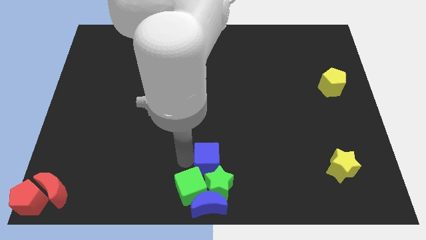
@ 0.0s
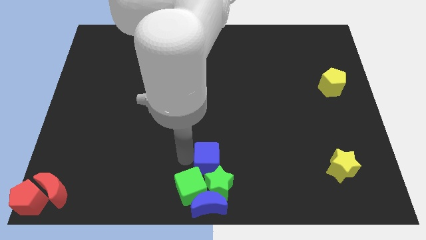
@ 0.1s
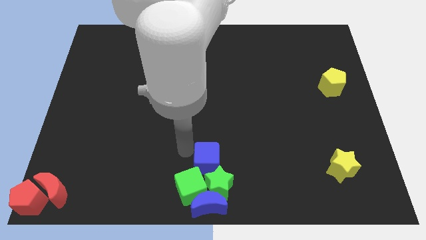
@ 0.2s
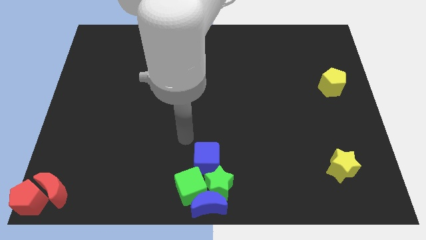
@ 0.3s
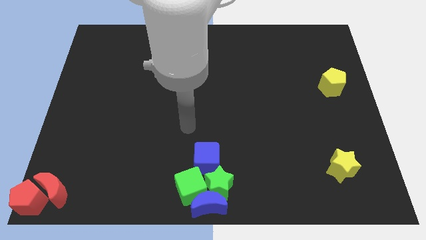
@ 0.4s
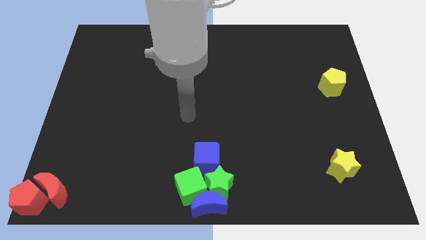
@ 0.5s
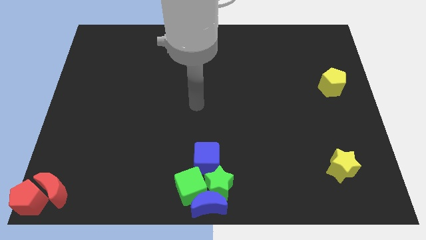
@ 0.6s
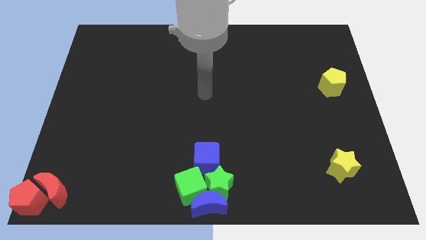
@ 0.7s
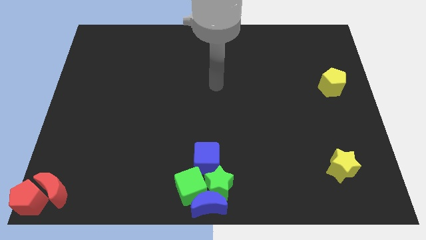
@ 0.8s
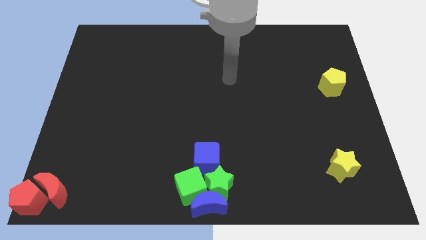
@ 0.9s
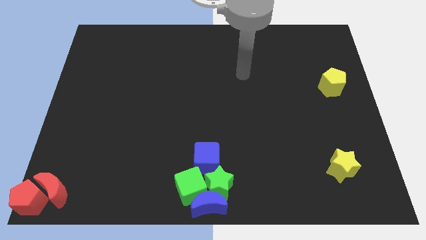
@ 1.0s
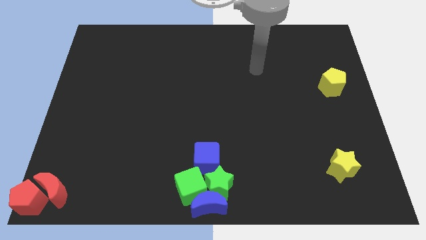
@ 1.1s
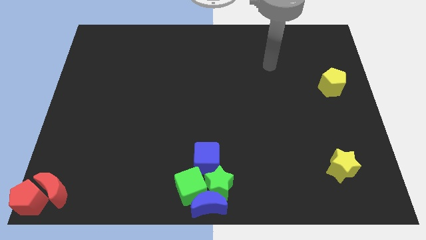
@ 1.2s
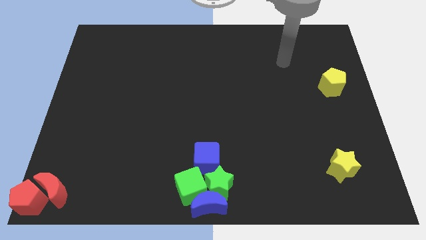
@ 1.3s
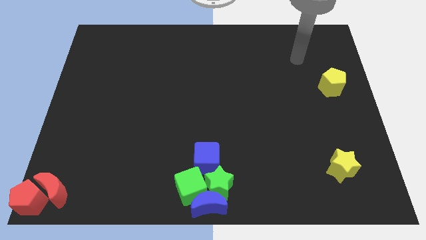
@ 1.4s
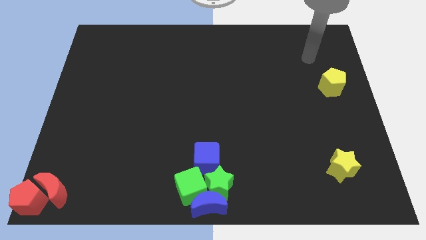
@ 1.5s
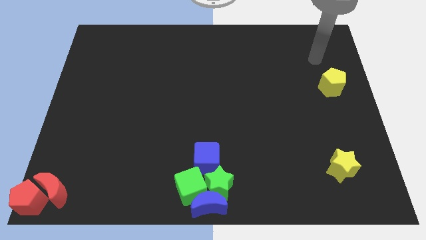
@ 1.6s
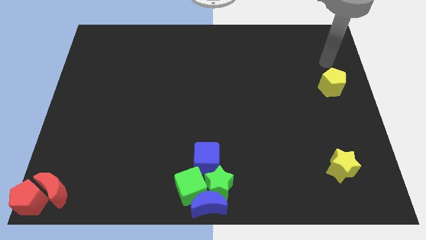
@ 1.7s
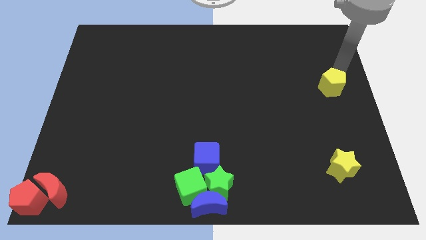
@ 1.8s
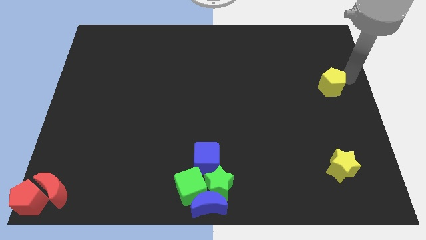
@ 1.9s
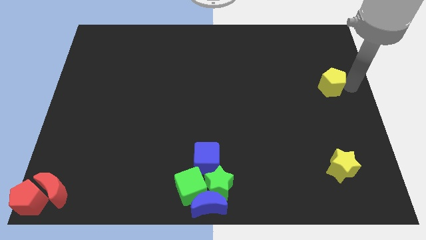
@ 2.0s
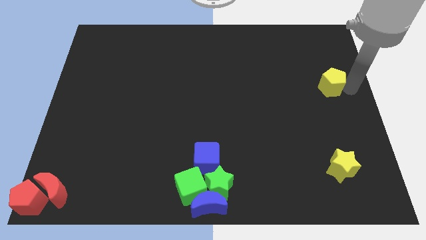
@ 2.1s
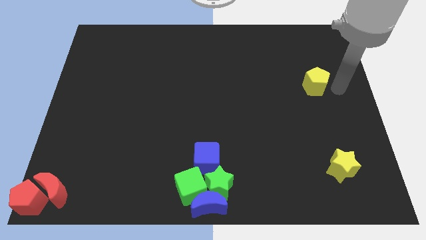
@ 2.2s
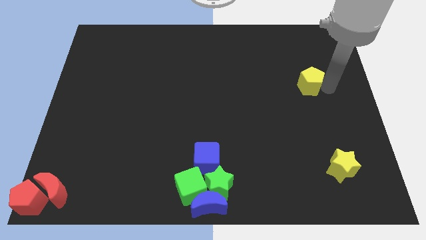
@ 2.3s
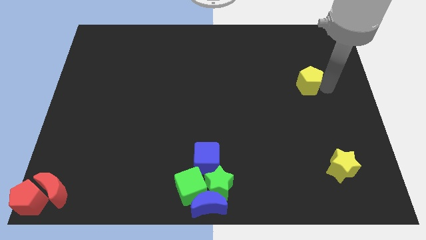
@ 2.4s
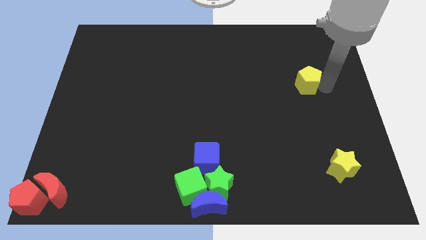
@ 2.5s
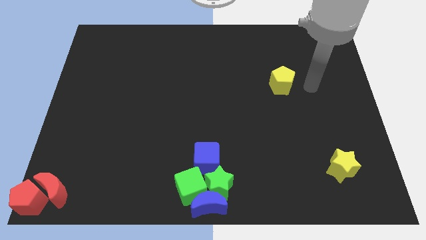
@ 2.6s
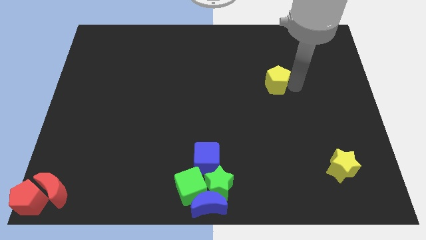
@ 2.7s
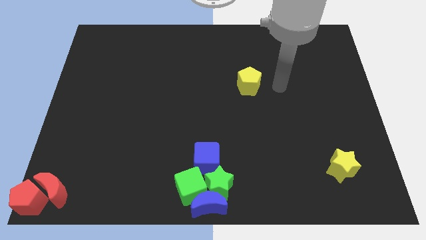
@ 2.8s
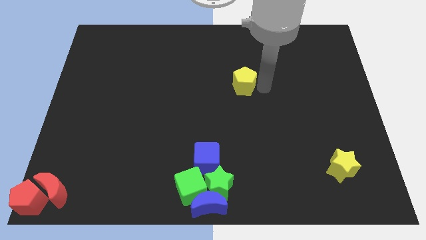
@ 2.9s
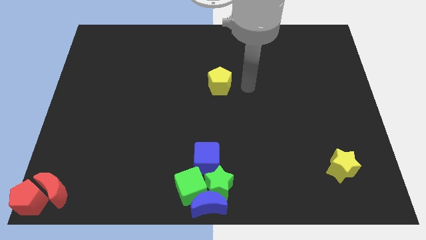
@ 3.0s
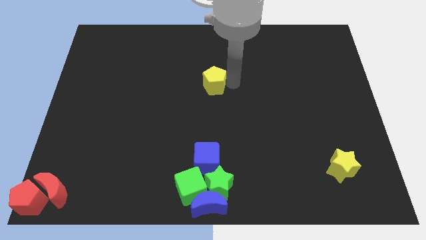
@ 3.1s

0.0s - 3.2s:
move the yellow pentagon towards center

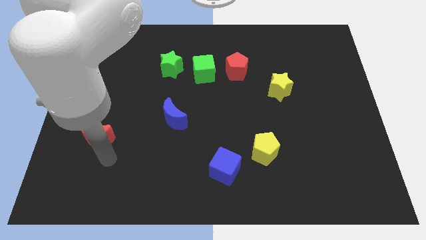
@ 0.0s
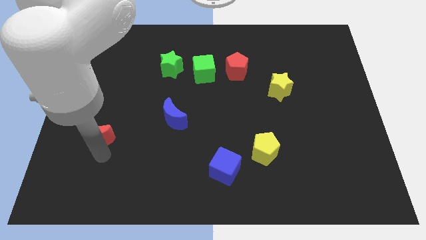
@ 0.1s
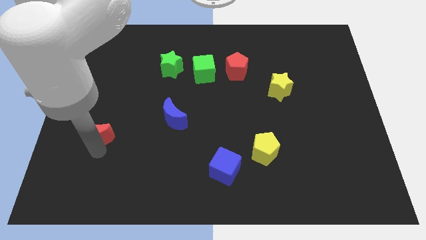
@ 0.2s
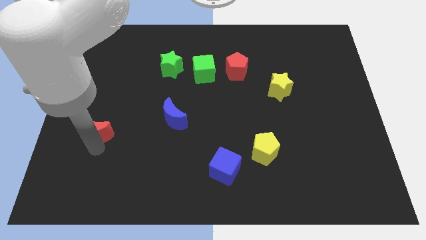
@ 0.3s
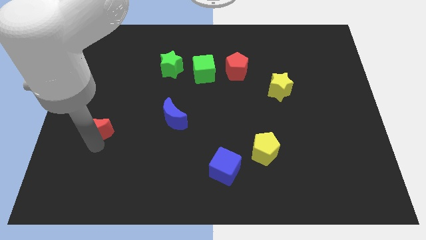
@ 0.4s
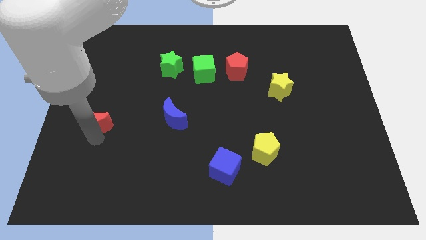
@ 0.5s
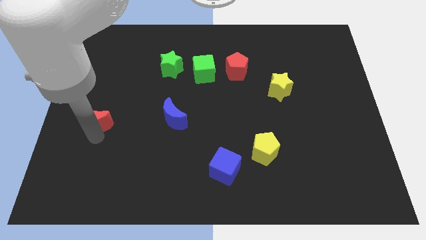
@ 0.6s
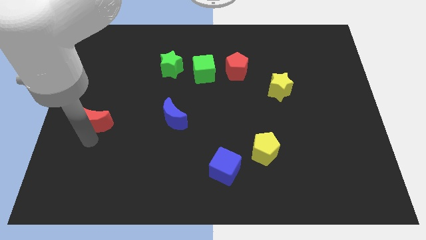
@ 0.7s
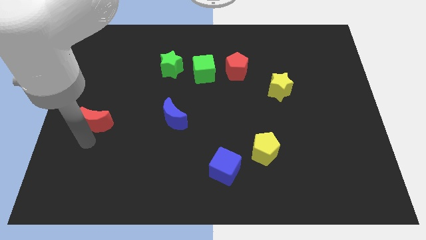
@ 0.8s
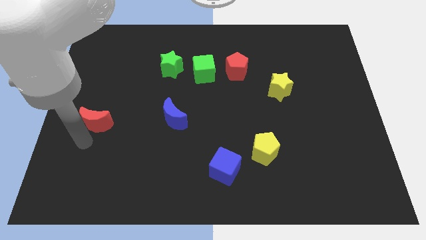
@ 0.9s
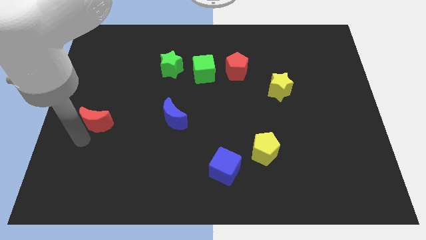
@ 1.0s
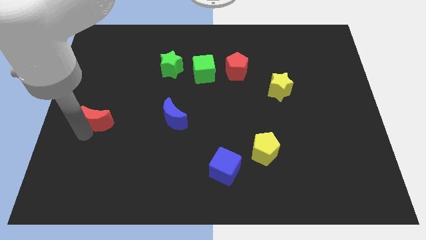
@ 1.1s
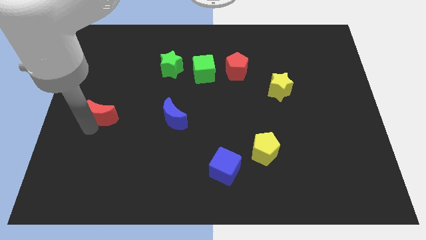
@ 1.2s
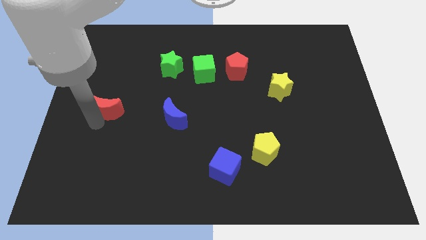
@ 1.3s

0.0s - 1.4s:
move the red moon upwards

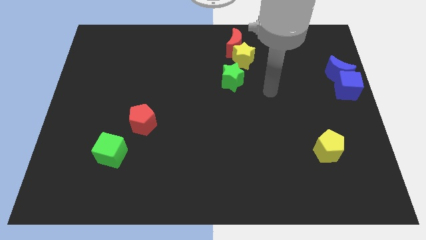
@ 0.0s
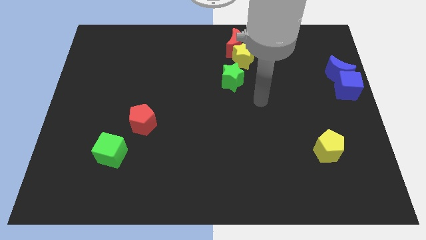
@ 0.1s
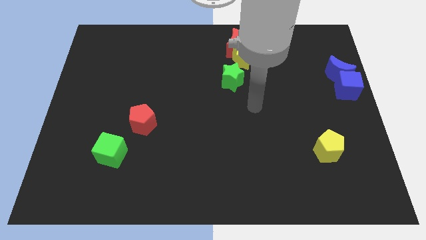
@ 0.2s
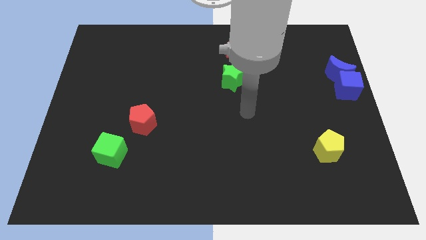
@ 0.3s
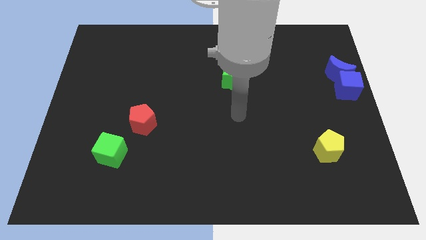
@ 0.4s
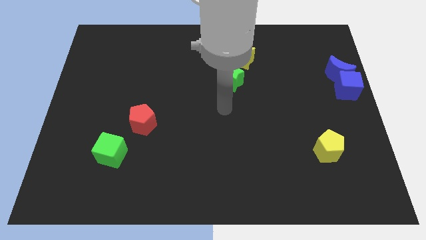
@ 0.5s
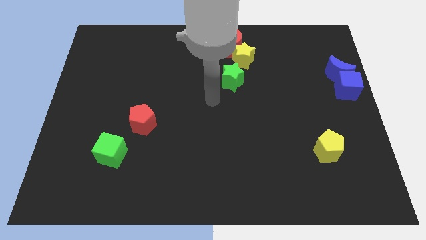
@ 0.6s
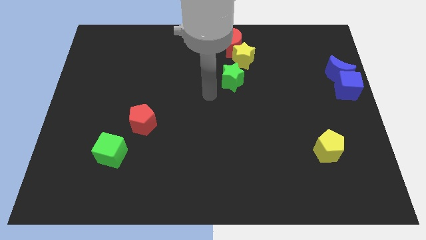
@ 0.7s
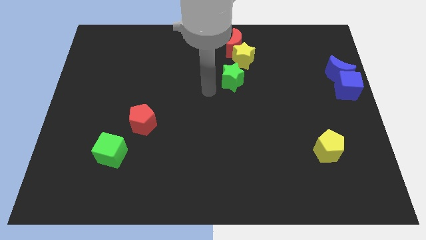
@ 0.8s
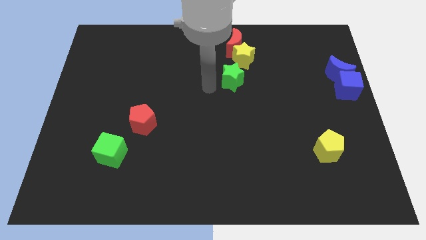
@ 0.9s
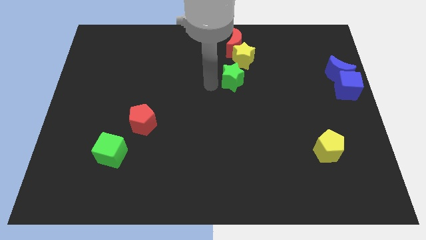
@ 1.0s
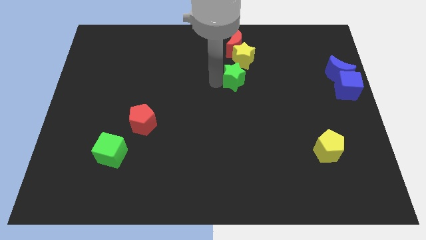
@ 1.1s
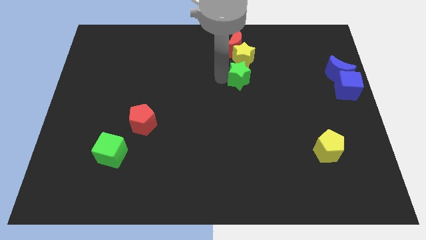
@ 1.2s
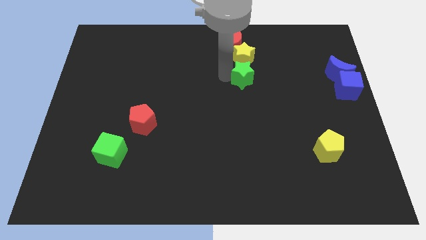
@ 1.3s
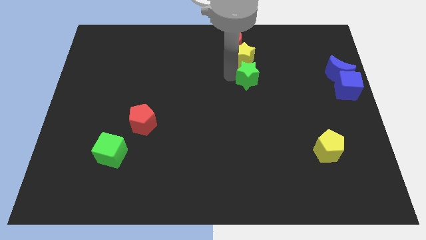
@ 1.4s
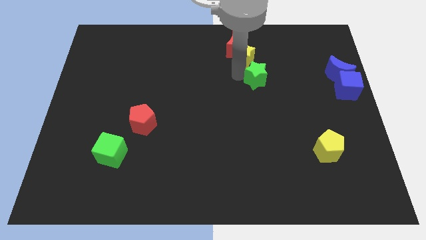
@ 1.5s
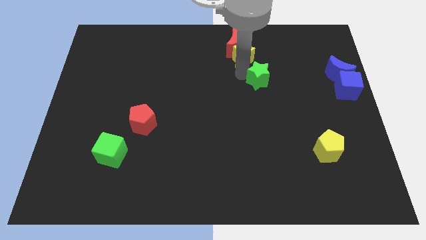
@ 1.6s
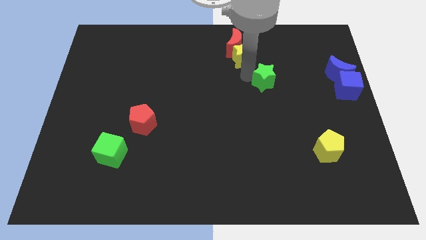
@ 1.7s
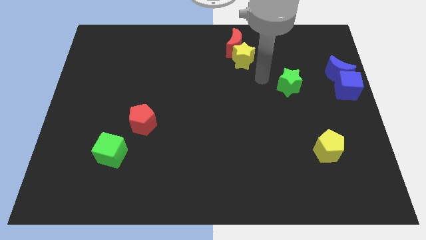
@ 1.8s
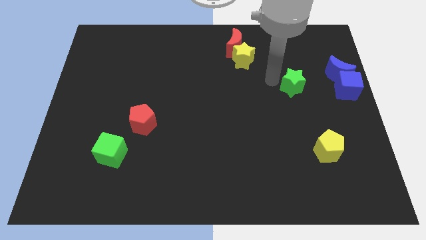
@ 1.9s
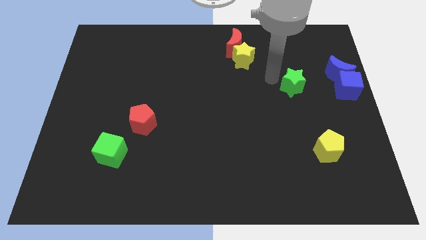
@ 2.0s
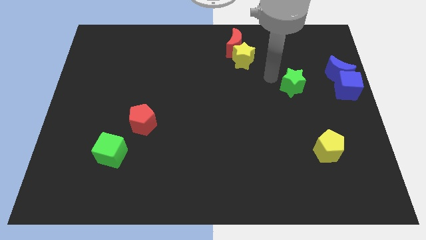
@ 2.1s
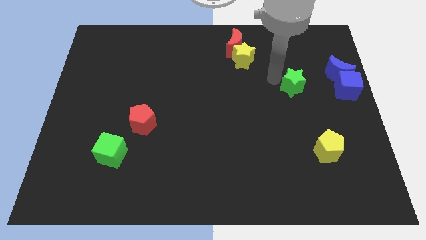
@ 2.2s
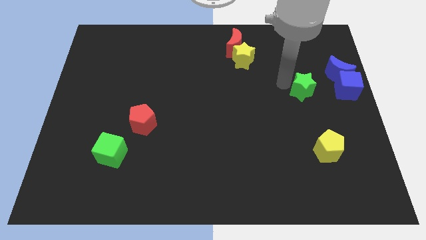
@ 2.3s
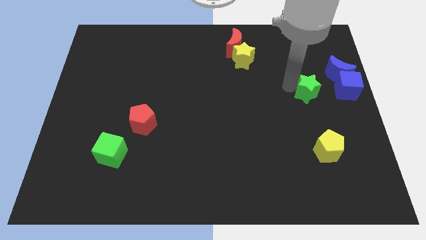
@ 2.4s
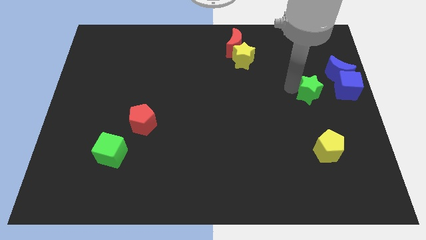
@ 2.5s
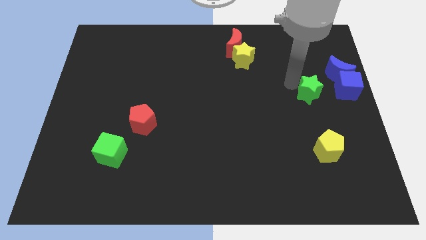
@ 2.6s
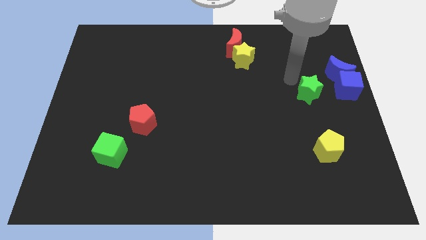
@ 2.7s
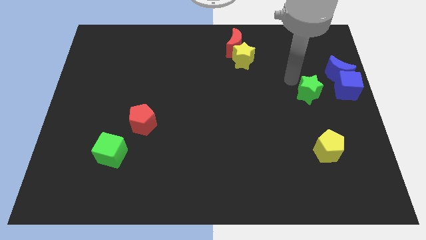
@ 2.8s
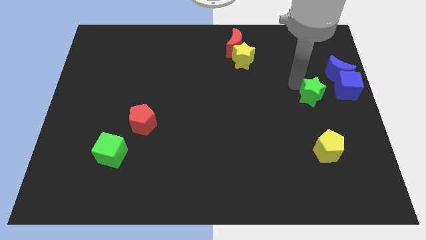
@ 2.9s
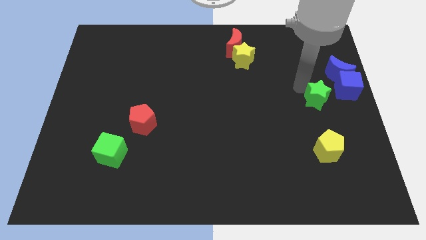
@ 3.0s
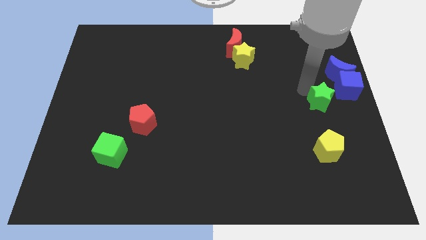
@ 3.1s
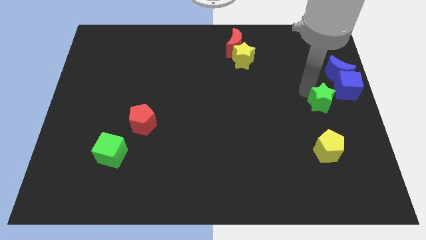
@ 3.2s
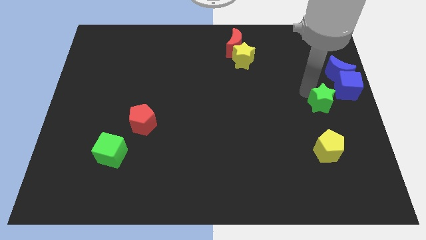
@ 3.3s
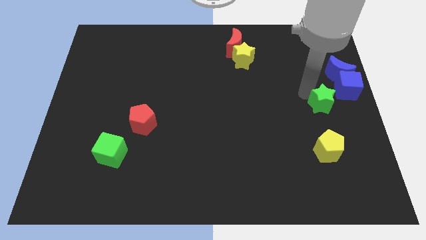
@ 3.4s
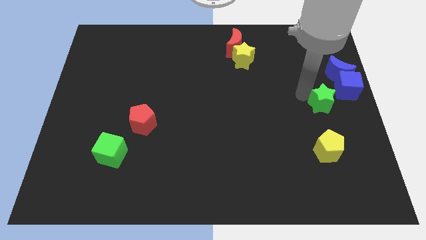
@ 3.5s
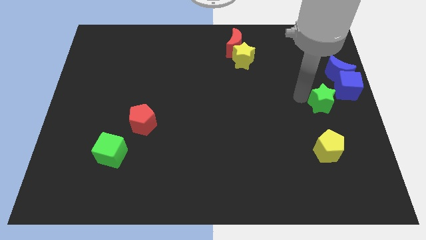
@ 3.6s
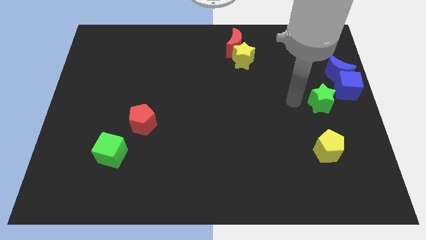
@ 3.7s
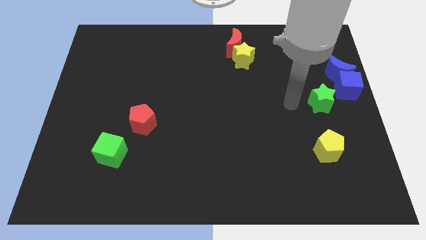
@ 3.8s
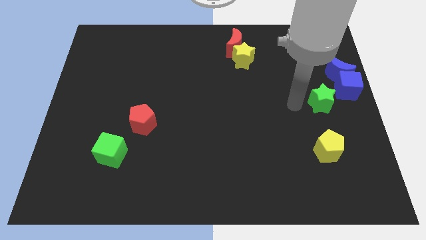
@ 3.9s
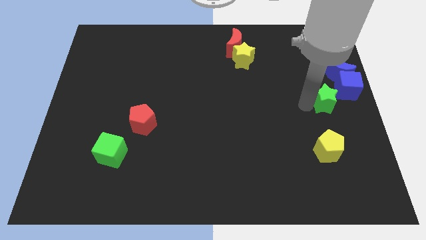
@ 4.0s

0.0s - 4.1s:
move the green star vertically above the yellow pentagon

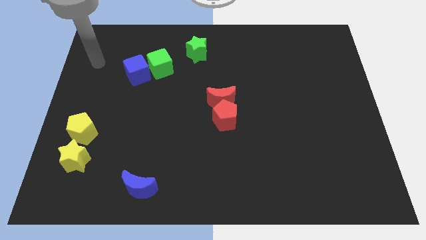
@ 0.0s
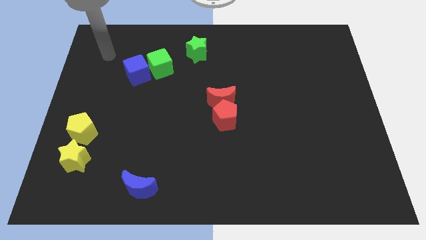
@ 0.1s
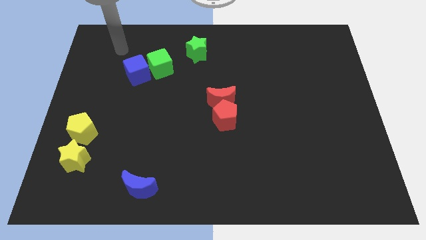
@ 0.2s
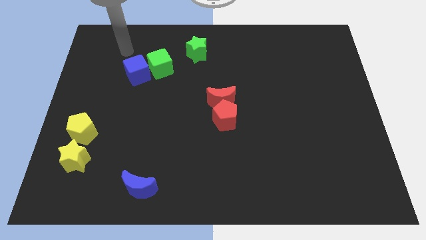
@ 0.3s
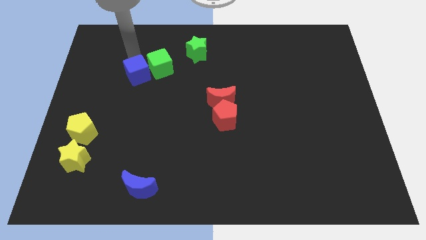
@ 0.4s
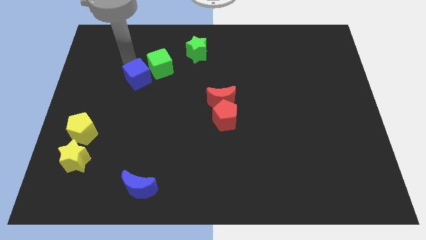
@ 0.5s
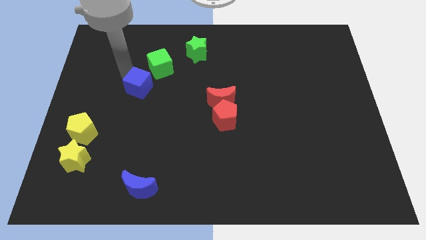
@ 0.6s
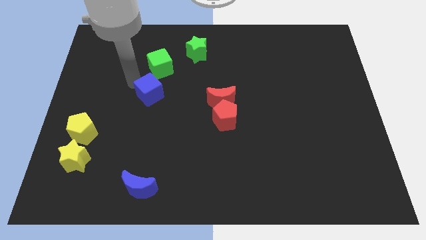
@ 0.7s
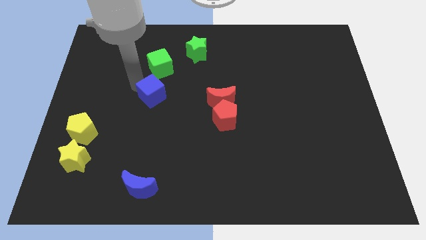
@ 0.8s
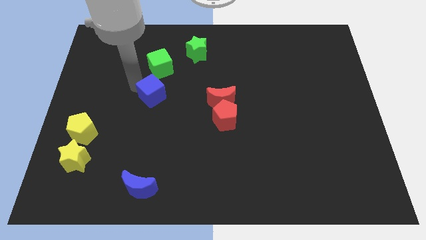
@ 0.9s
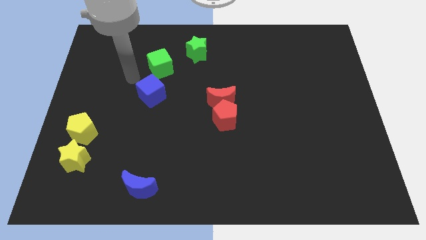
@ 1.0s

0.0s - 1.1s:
place the blue cube diagonal to the green cube
